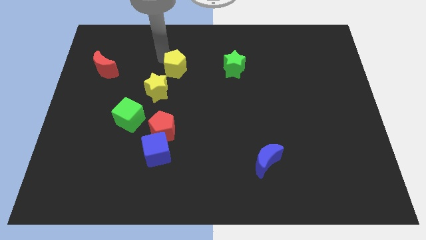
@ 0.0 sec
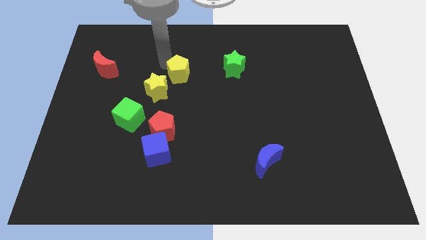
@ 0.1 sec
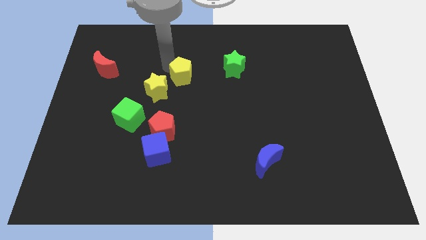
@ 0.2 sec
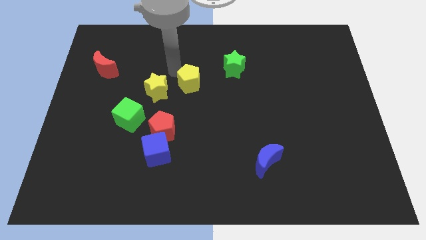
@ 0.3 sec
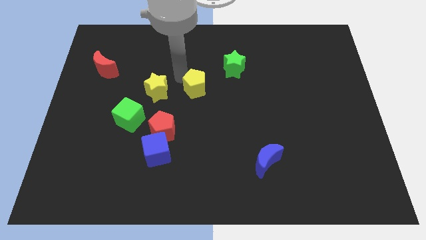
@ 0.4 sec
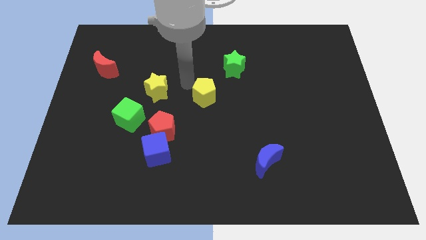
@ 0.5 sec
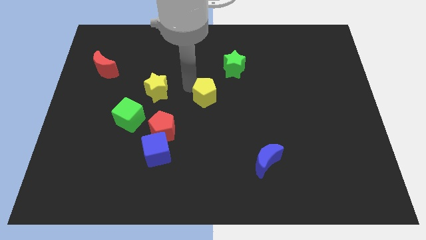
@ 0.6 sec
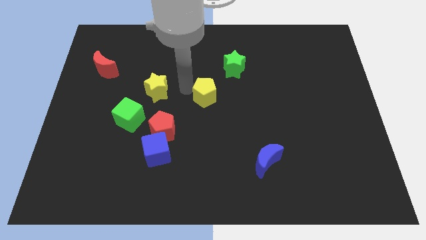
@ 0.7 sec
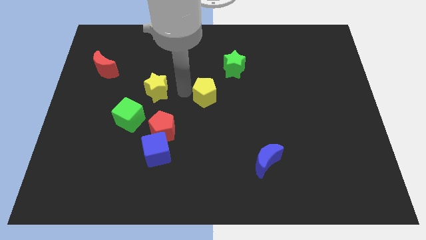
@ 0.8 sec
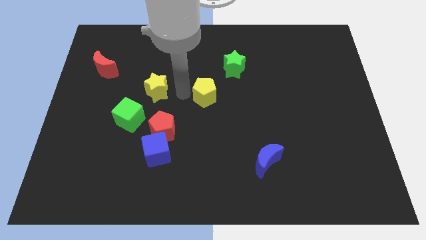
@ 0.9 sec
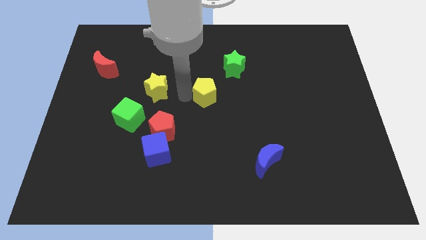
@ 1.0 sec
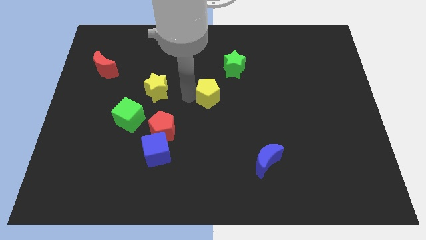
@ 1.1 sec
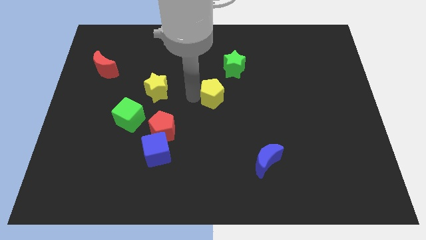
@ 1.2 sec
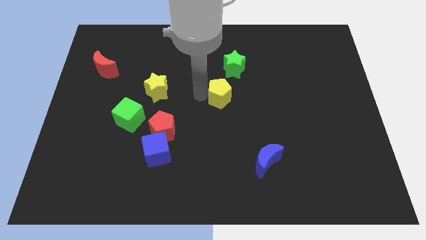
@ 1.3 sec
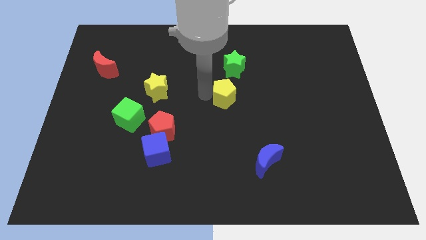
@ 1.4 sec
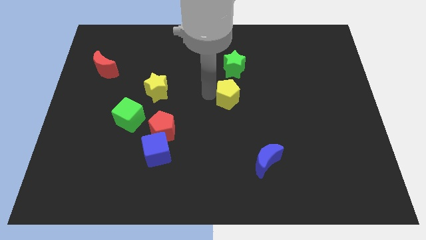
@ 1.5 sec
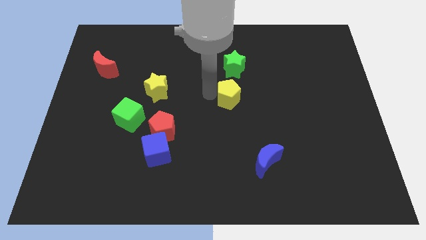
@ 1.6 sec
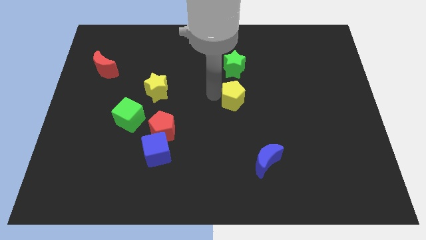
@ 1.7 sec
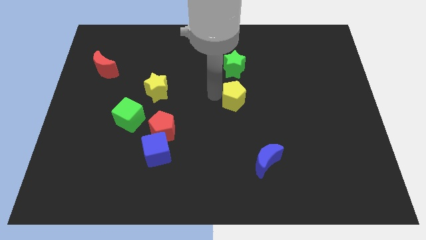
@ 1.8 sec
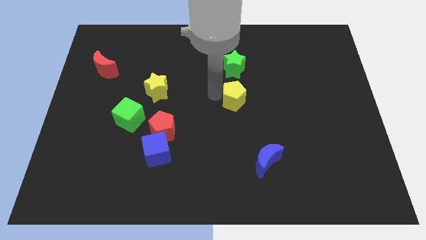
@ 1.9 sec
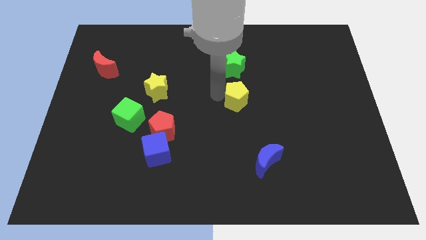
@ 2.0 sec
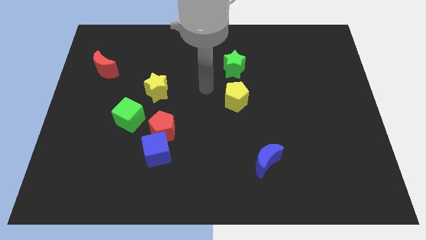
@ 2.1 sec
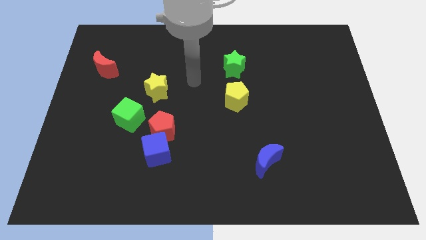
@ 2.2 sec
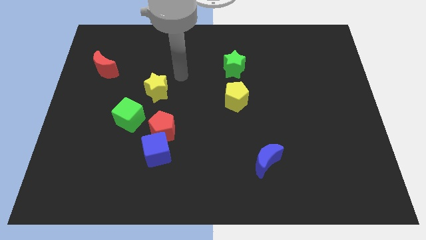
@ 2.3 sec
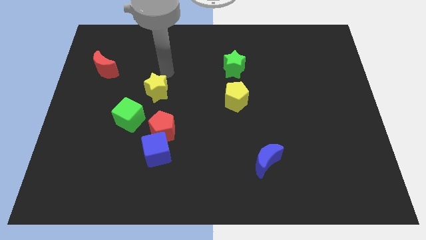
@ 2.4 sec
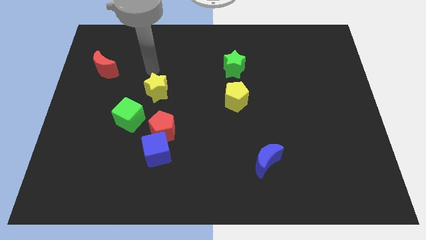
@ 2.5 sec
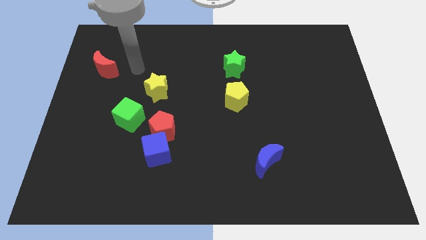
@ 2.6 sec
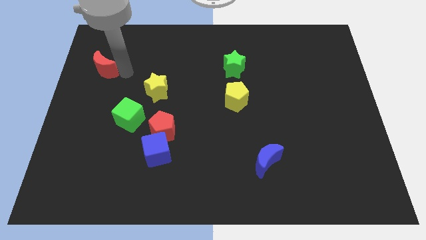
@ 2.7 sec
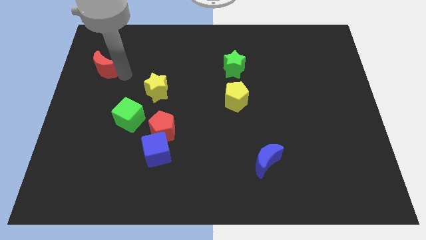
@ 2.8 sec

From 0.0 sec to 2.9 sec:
move the yellow pentagon to the bottom of the green star

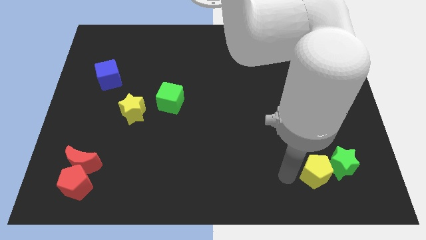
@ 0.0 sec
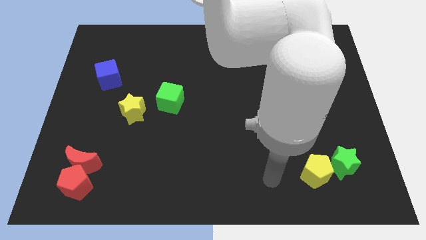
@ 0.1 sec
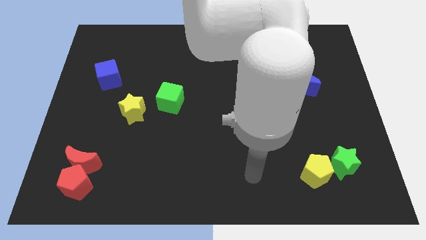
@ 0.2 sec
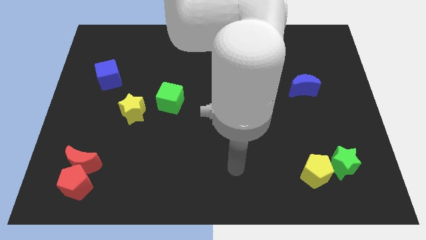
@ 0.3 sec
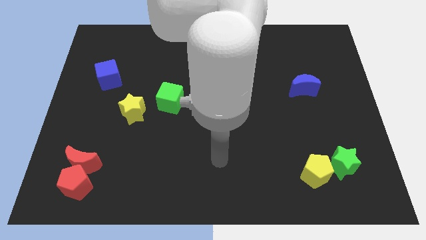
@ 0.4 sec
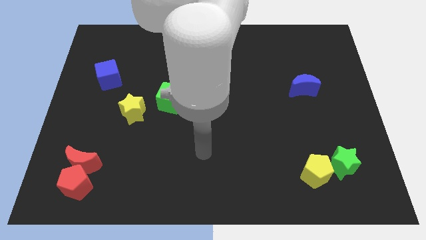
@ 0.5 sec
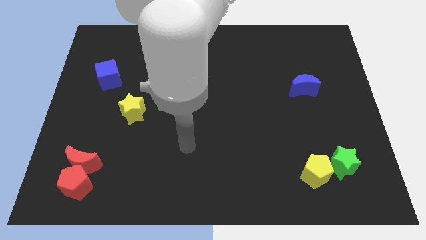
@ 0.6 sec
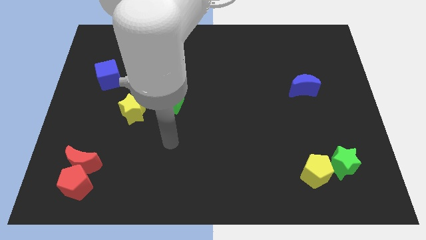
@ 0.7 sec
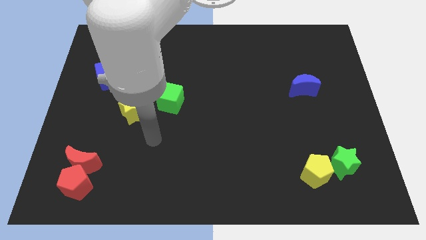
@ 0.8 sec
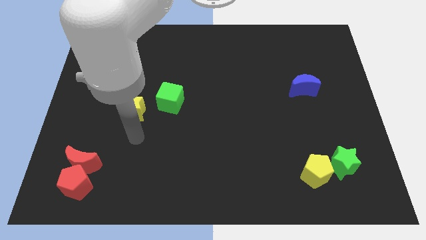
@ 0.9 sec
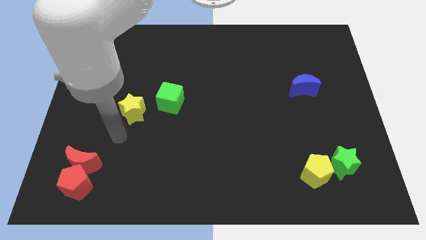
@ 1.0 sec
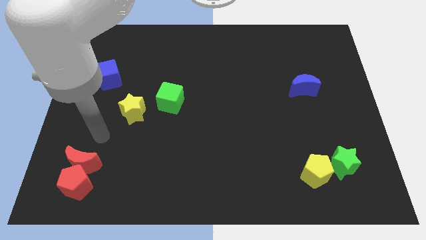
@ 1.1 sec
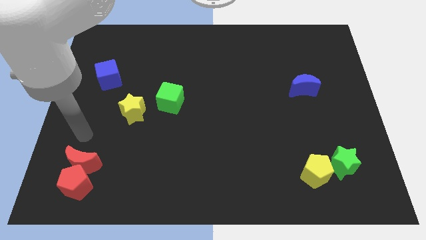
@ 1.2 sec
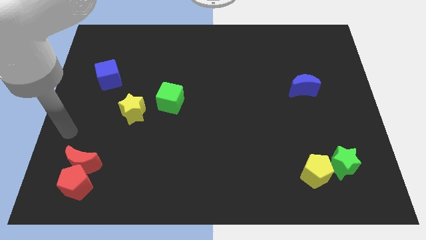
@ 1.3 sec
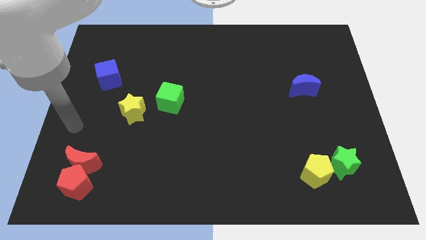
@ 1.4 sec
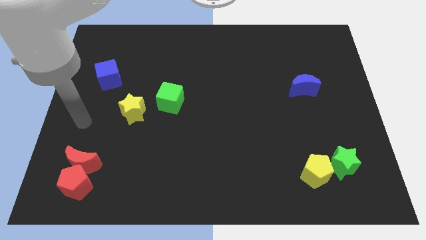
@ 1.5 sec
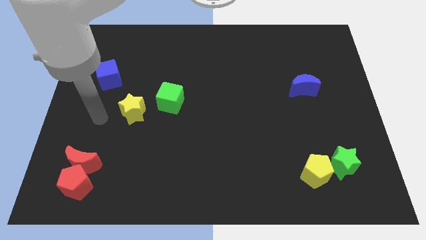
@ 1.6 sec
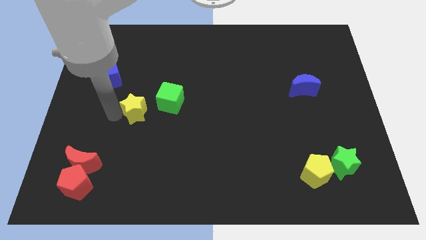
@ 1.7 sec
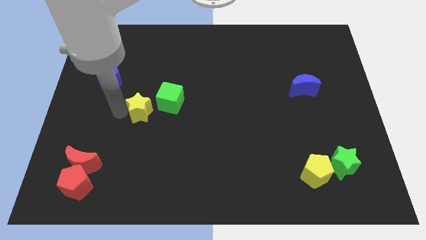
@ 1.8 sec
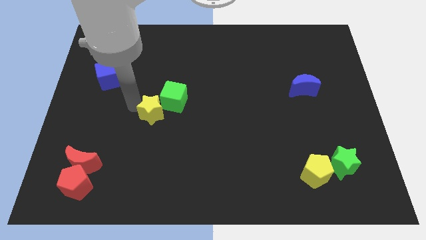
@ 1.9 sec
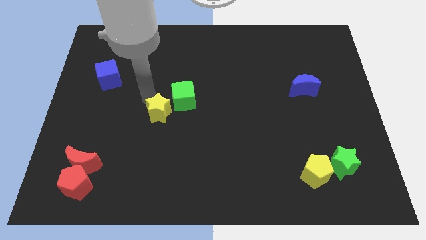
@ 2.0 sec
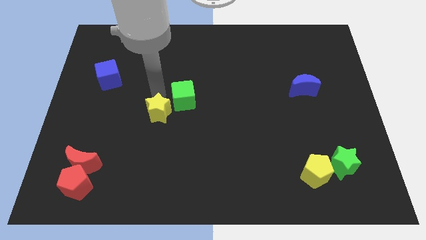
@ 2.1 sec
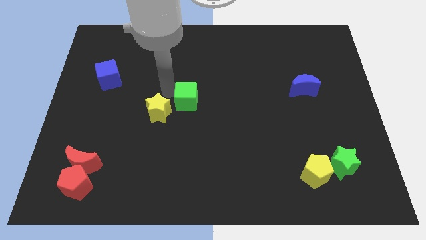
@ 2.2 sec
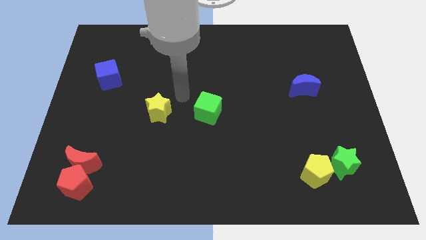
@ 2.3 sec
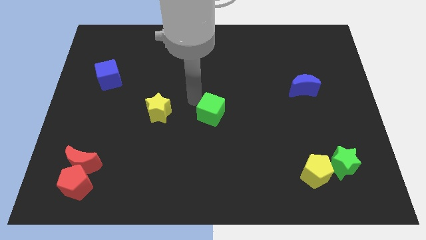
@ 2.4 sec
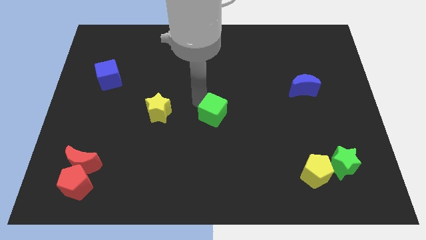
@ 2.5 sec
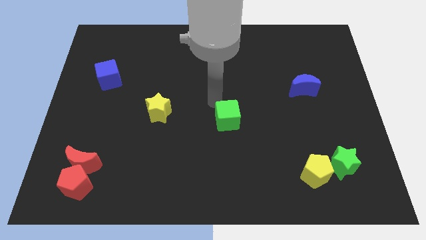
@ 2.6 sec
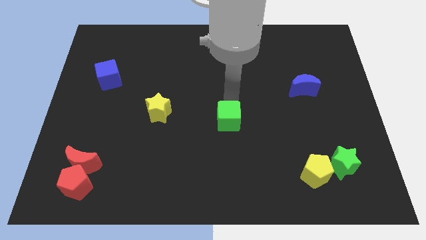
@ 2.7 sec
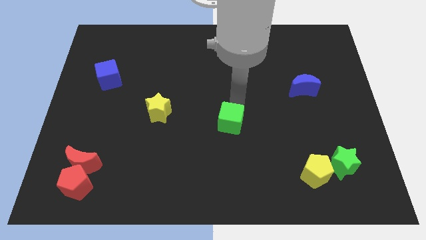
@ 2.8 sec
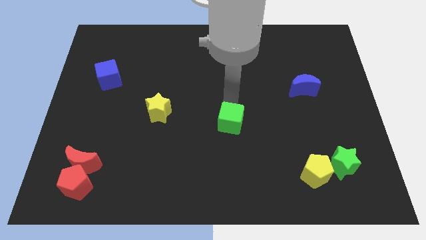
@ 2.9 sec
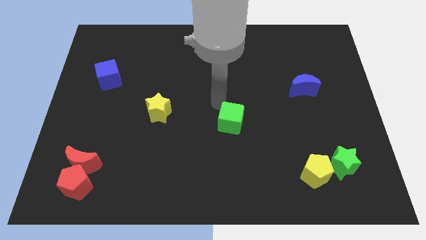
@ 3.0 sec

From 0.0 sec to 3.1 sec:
push green cube to the center

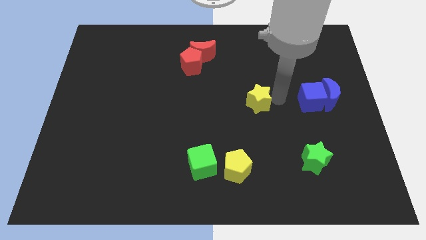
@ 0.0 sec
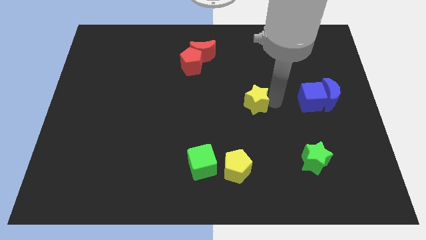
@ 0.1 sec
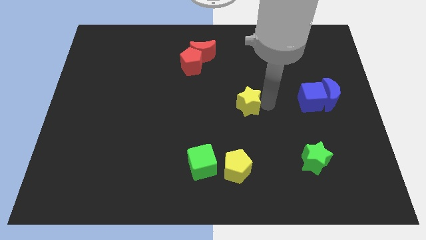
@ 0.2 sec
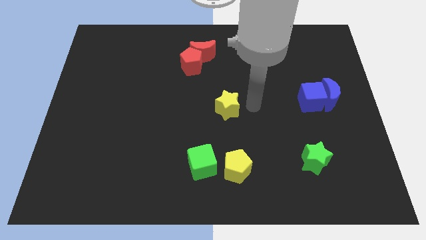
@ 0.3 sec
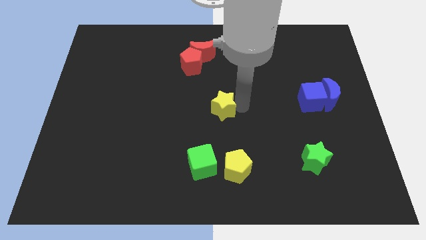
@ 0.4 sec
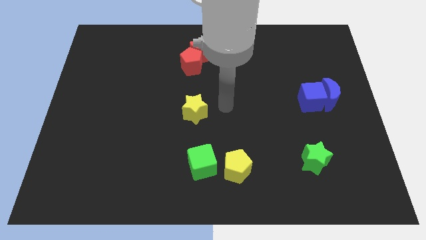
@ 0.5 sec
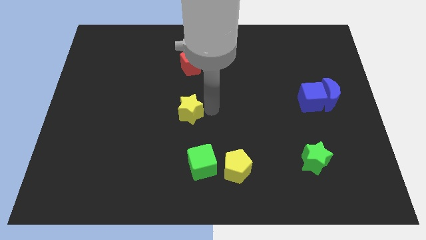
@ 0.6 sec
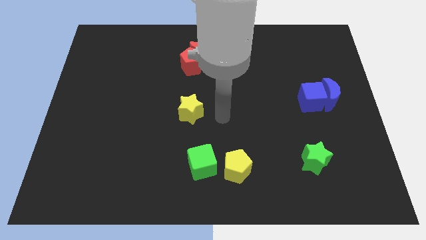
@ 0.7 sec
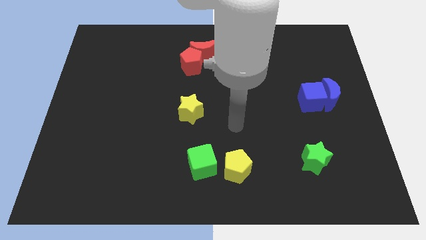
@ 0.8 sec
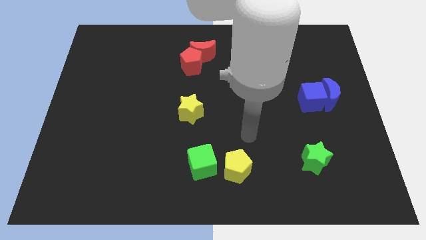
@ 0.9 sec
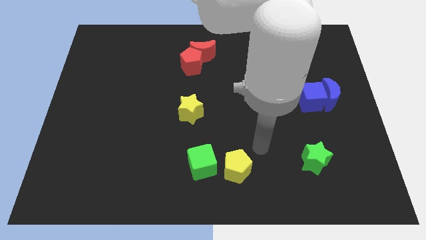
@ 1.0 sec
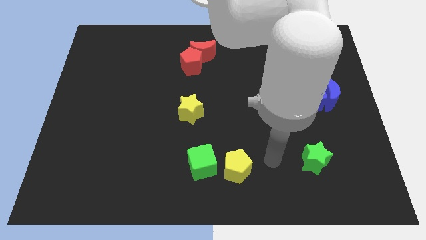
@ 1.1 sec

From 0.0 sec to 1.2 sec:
slide the yellow star diagonally top left to the yellow pentagon

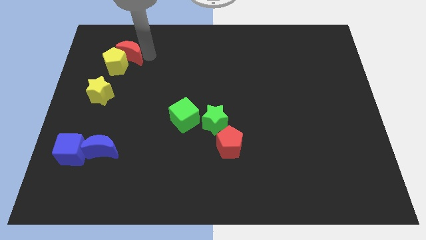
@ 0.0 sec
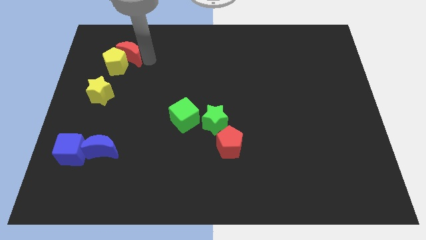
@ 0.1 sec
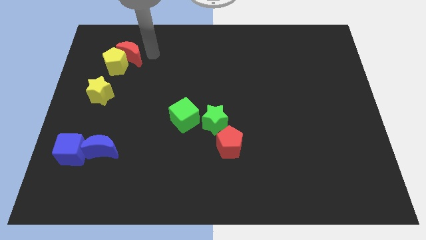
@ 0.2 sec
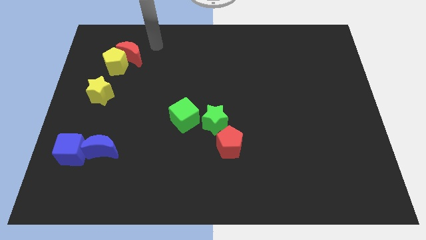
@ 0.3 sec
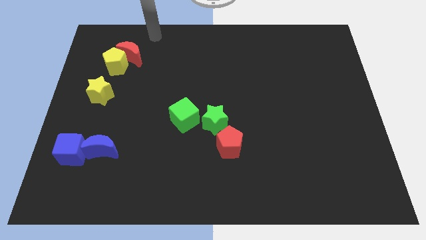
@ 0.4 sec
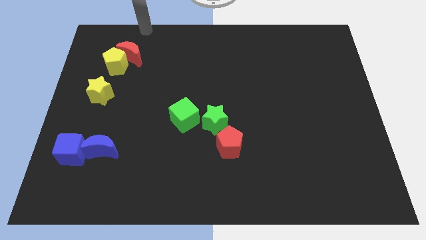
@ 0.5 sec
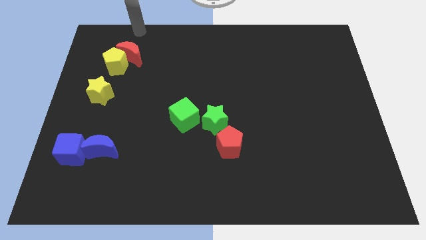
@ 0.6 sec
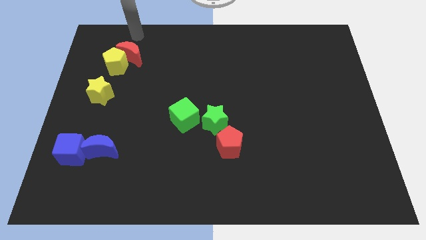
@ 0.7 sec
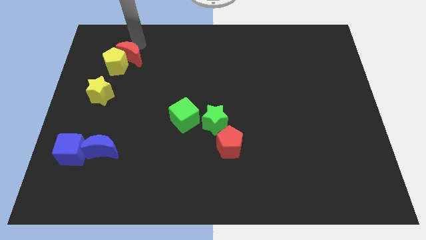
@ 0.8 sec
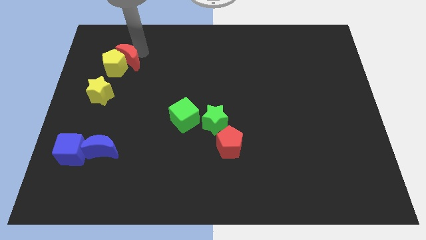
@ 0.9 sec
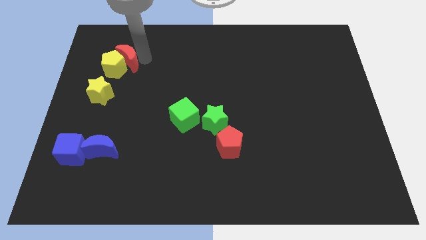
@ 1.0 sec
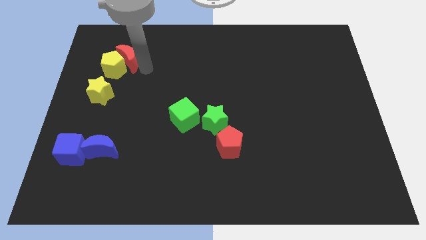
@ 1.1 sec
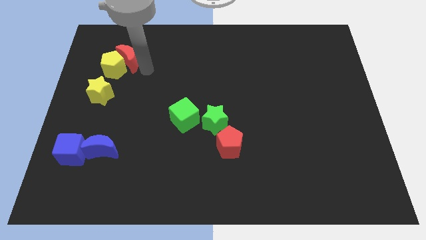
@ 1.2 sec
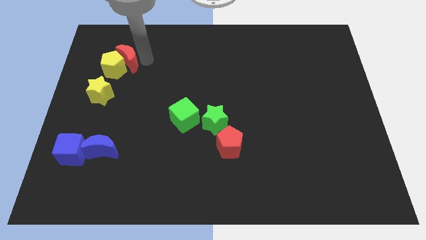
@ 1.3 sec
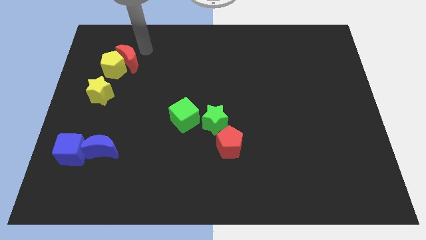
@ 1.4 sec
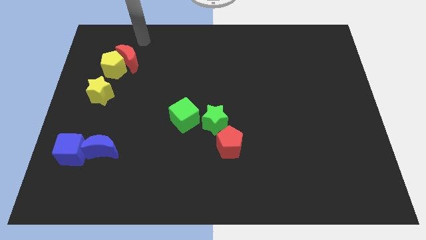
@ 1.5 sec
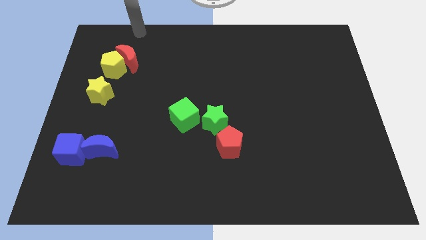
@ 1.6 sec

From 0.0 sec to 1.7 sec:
slightly move the red crescent to the yellow pentagon
